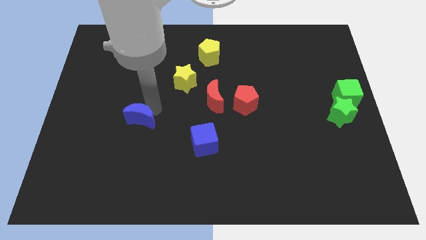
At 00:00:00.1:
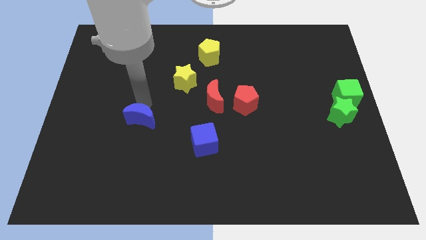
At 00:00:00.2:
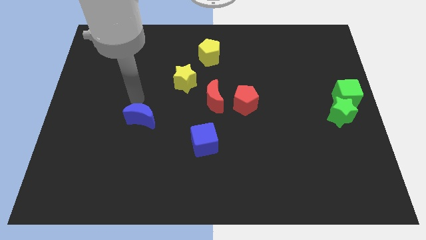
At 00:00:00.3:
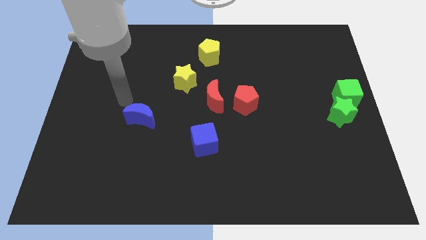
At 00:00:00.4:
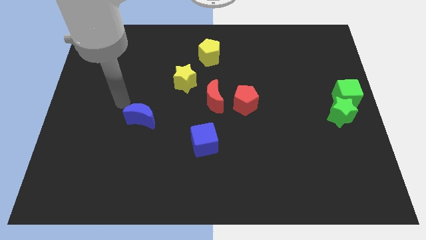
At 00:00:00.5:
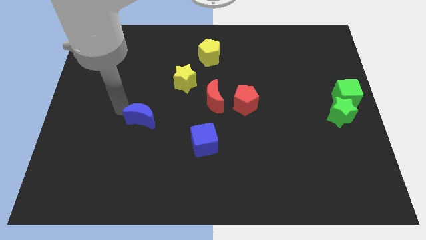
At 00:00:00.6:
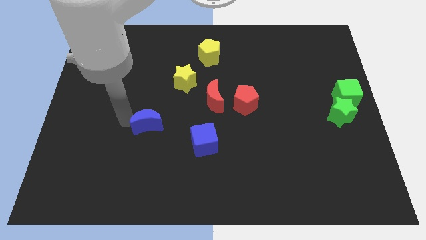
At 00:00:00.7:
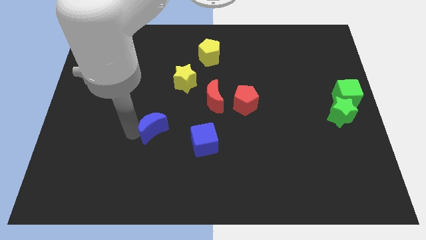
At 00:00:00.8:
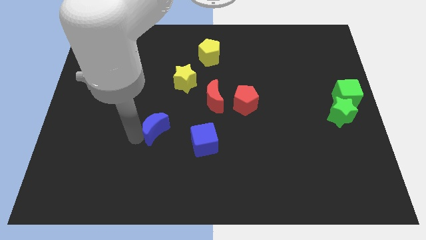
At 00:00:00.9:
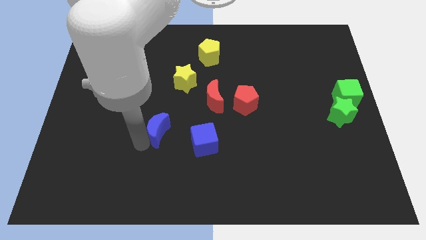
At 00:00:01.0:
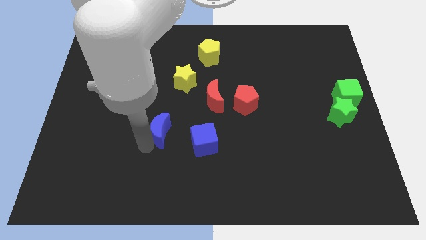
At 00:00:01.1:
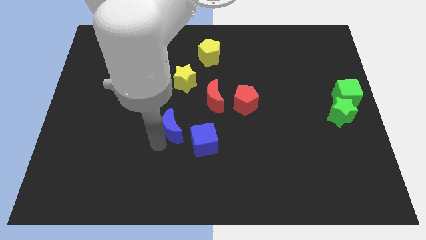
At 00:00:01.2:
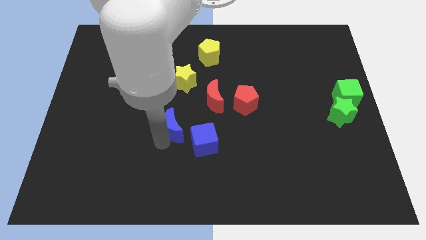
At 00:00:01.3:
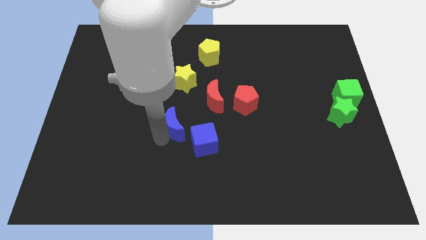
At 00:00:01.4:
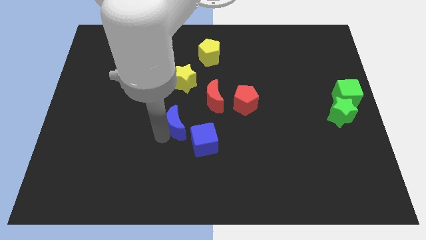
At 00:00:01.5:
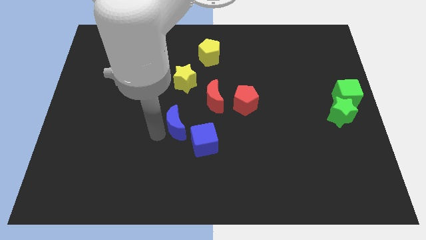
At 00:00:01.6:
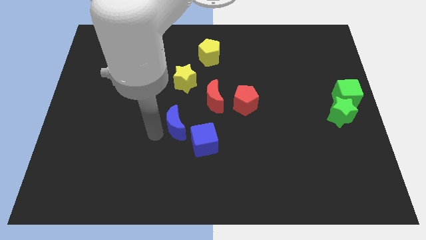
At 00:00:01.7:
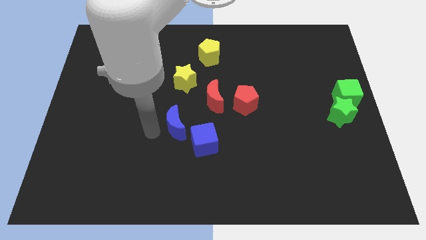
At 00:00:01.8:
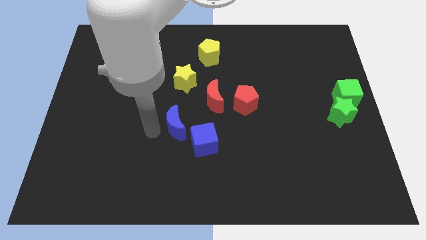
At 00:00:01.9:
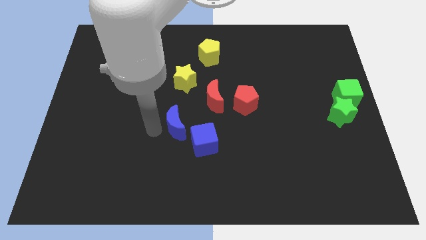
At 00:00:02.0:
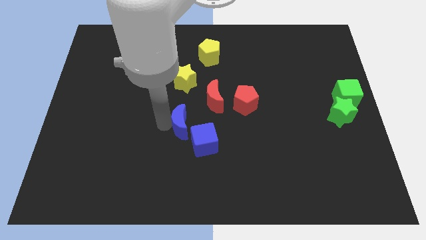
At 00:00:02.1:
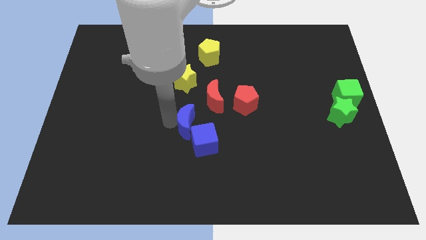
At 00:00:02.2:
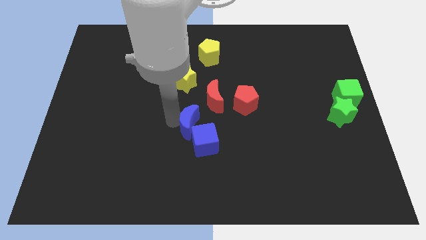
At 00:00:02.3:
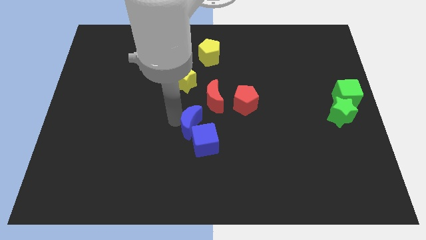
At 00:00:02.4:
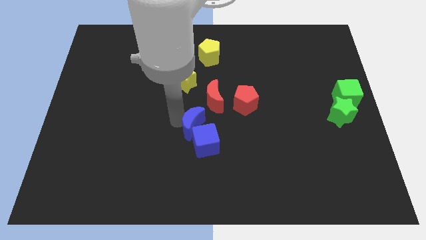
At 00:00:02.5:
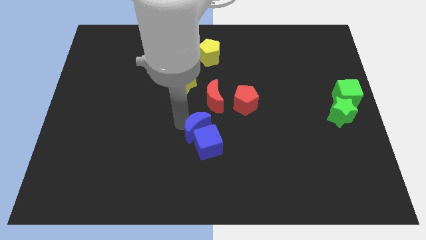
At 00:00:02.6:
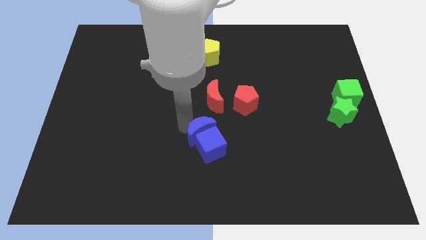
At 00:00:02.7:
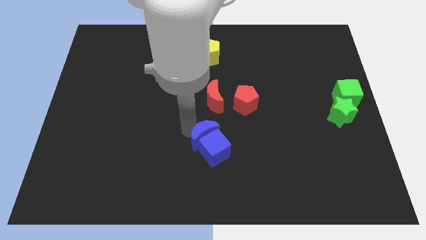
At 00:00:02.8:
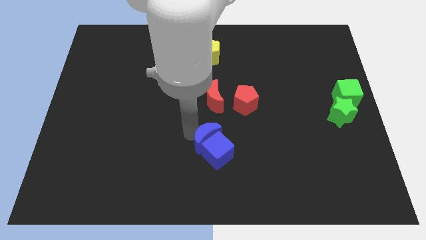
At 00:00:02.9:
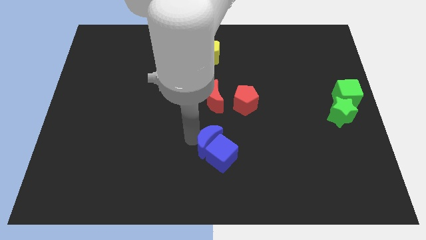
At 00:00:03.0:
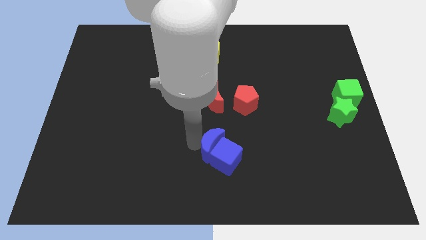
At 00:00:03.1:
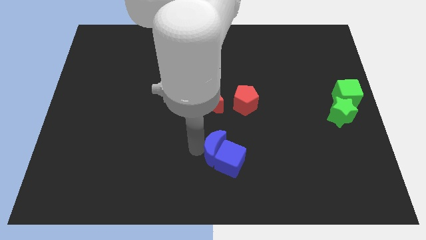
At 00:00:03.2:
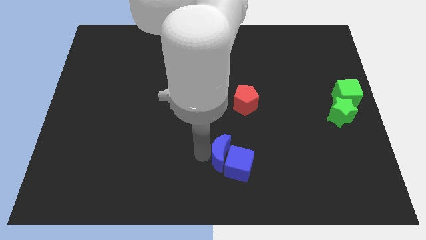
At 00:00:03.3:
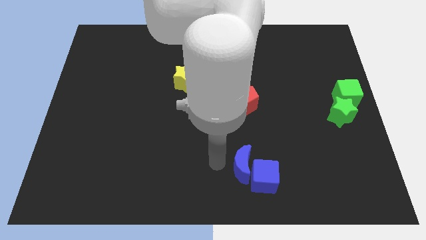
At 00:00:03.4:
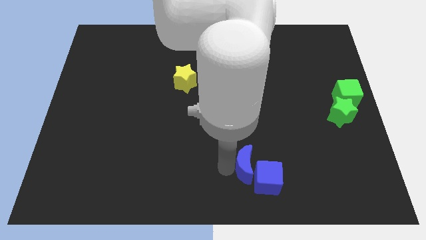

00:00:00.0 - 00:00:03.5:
move the blue crescent into the blue cube

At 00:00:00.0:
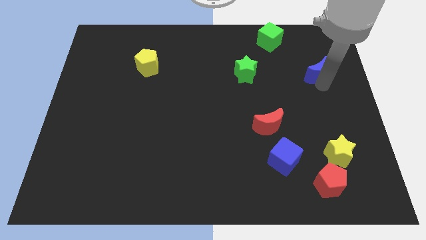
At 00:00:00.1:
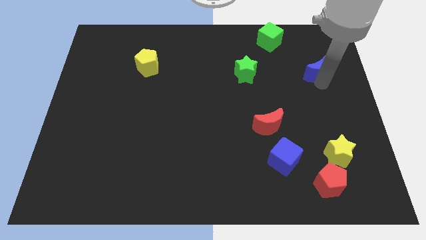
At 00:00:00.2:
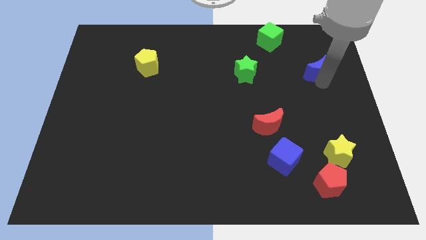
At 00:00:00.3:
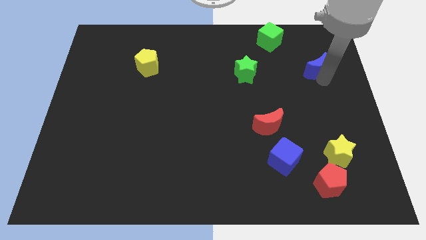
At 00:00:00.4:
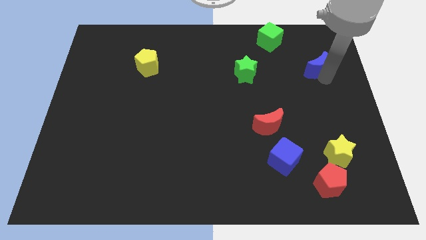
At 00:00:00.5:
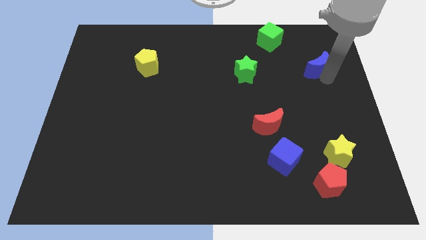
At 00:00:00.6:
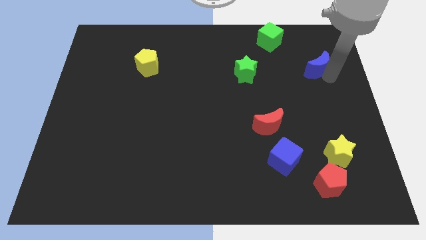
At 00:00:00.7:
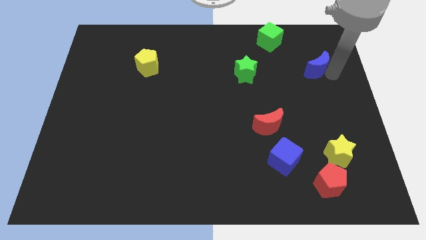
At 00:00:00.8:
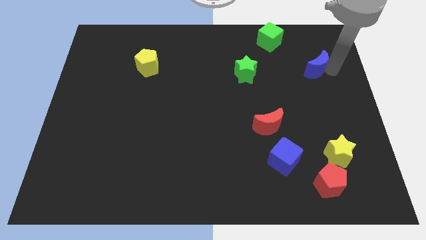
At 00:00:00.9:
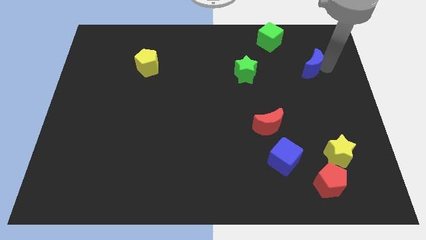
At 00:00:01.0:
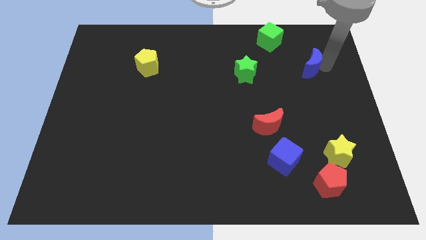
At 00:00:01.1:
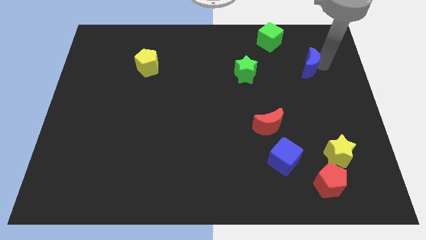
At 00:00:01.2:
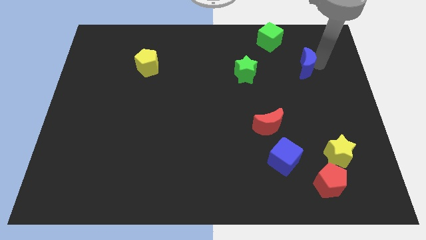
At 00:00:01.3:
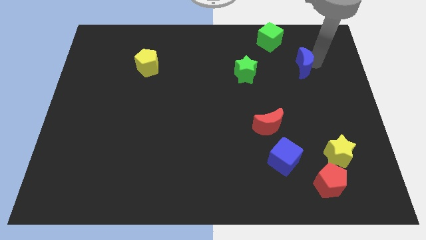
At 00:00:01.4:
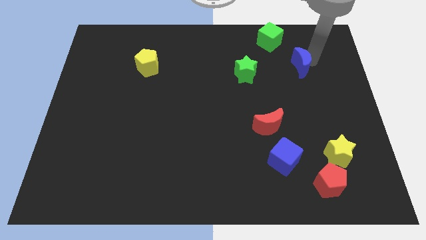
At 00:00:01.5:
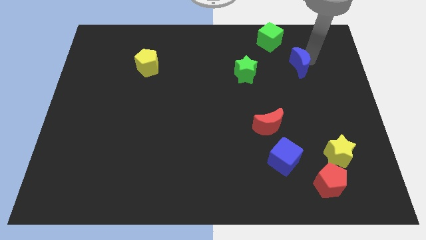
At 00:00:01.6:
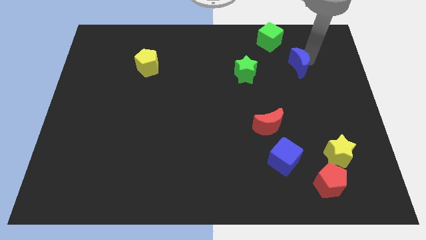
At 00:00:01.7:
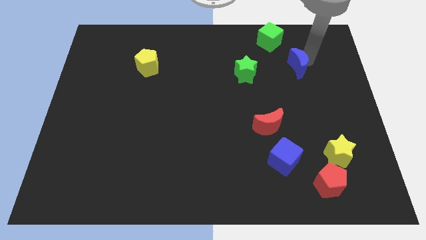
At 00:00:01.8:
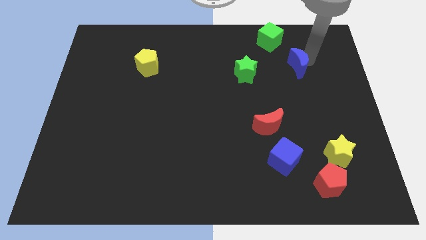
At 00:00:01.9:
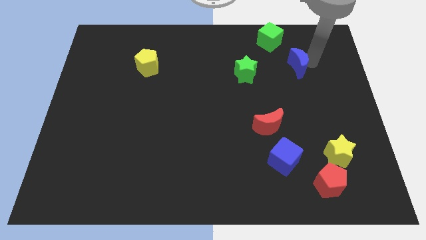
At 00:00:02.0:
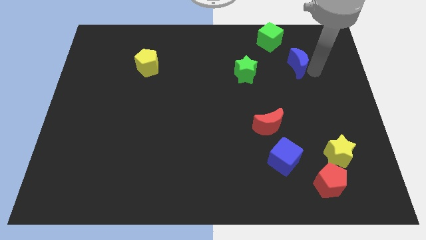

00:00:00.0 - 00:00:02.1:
move the blue crescent closer to the green cube

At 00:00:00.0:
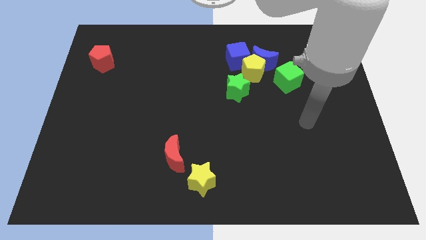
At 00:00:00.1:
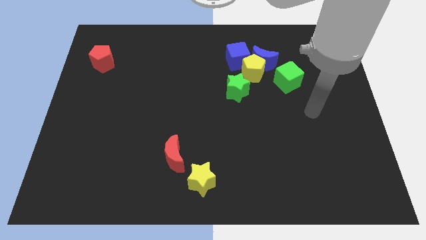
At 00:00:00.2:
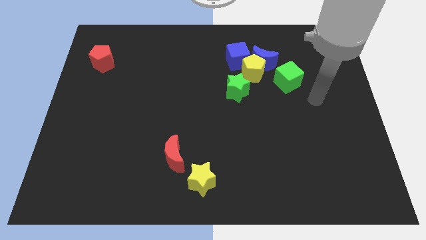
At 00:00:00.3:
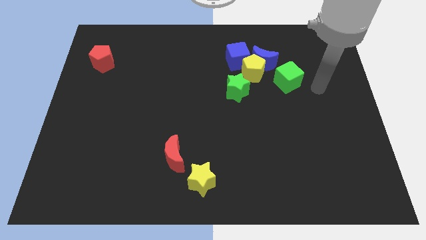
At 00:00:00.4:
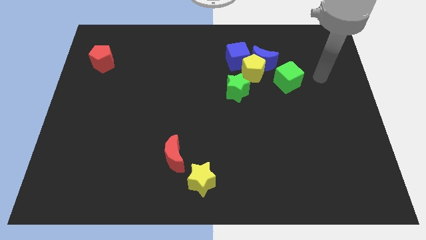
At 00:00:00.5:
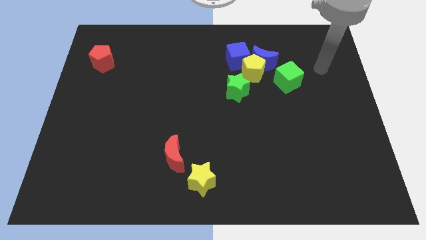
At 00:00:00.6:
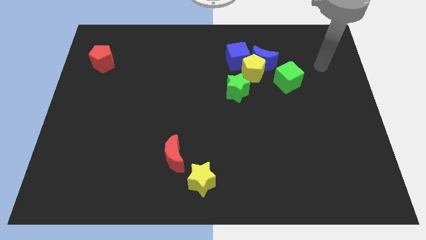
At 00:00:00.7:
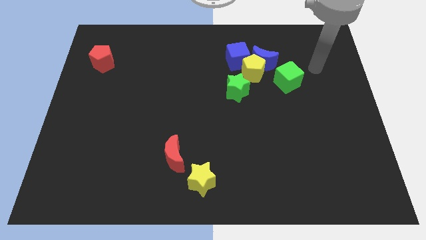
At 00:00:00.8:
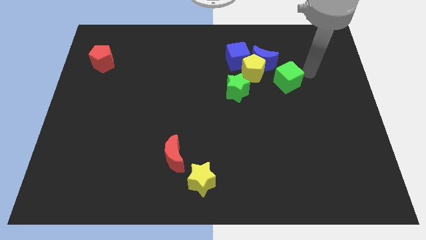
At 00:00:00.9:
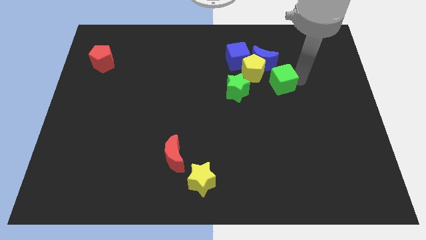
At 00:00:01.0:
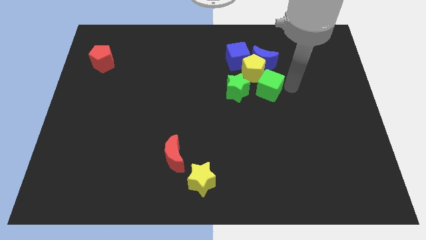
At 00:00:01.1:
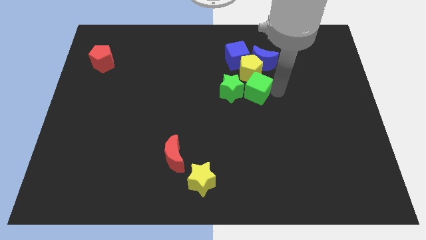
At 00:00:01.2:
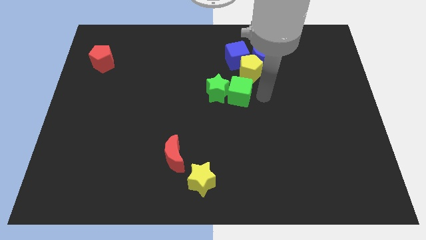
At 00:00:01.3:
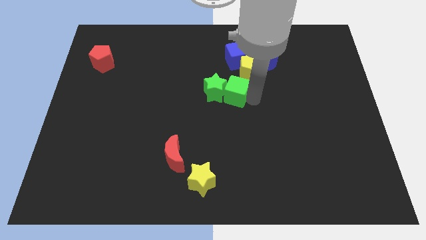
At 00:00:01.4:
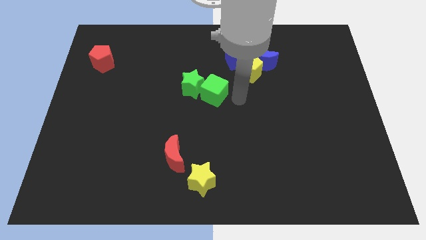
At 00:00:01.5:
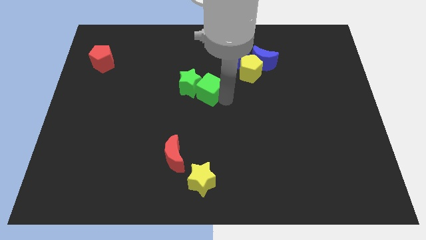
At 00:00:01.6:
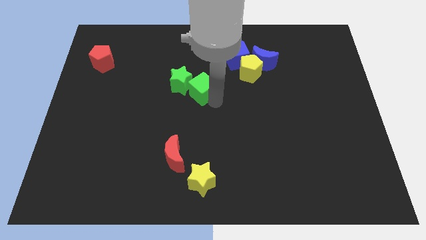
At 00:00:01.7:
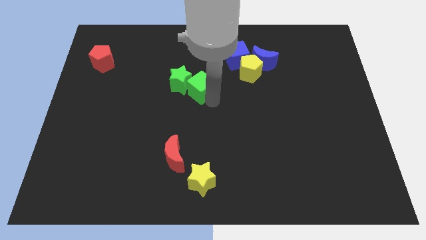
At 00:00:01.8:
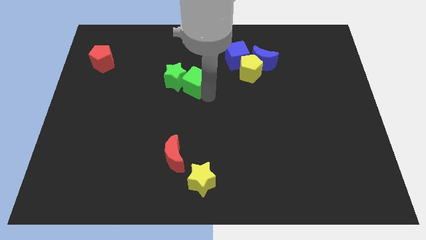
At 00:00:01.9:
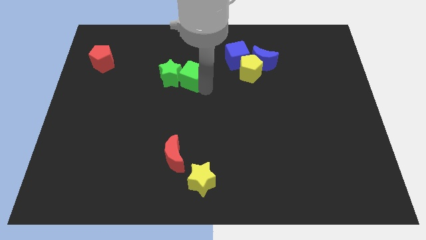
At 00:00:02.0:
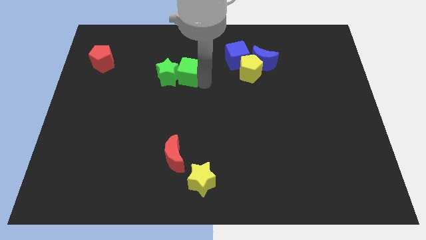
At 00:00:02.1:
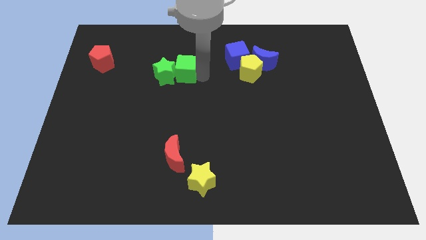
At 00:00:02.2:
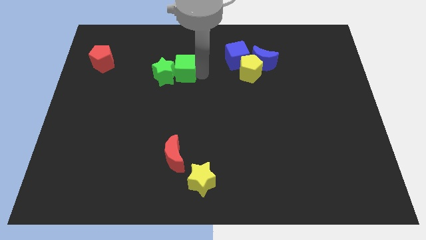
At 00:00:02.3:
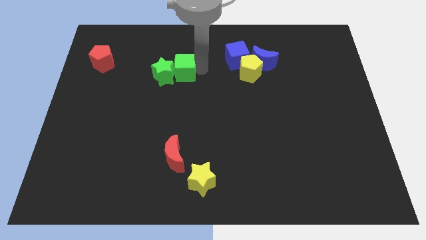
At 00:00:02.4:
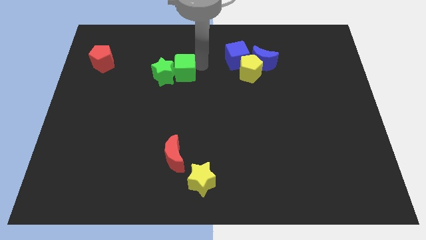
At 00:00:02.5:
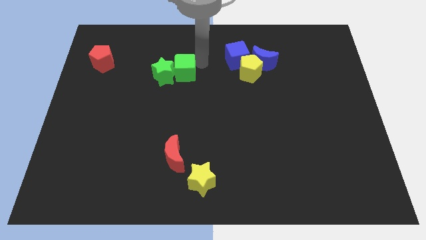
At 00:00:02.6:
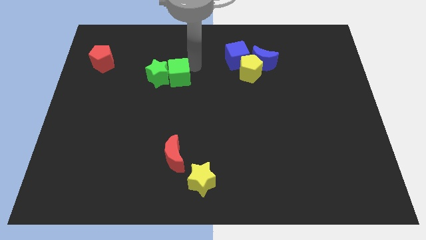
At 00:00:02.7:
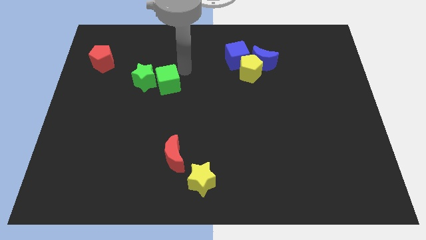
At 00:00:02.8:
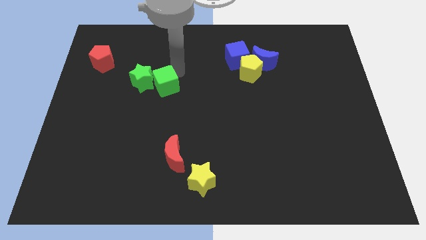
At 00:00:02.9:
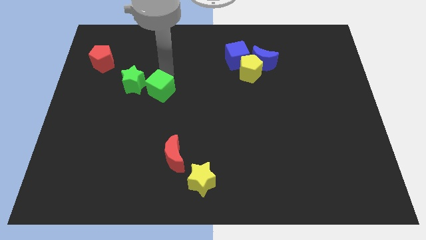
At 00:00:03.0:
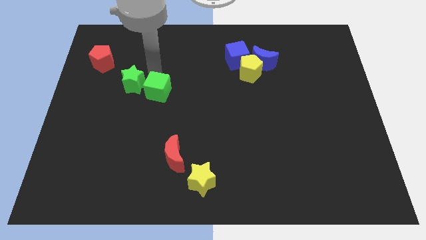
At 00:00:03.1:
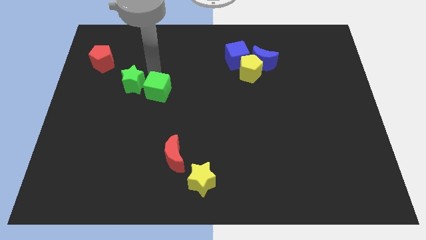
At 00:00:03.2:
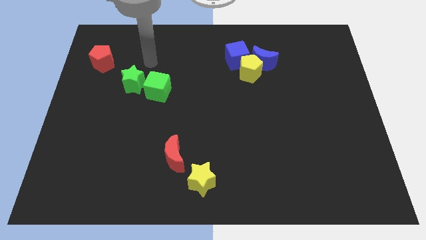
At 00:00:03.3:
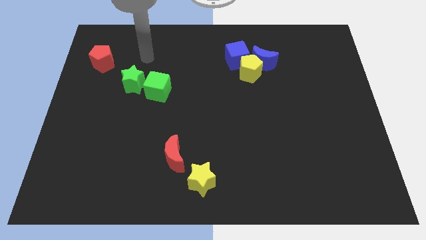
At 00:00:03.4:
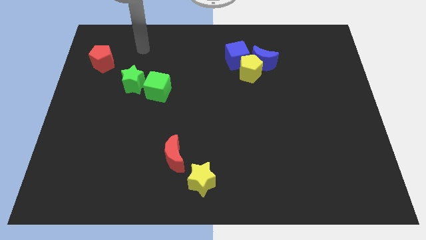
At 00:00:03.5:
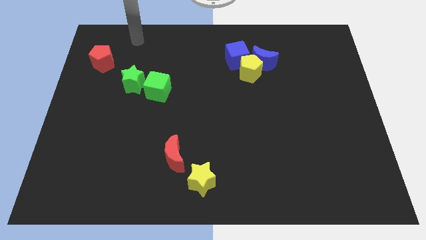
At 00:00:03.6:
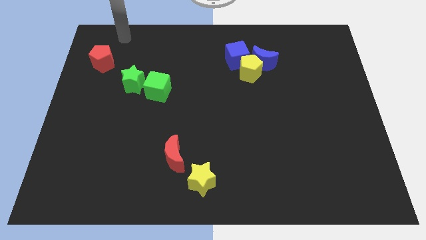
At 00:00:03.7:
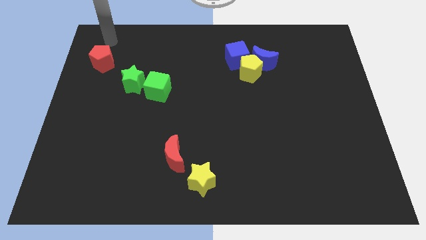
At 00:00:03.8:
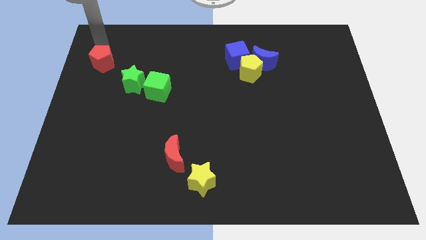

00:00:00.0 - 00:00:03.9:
push the green blocks to the left of the board
